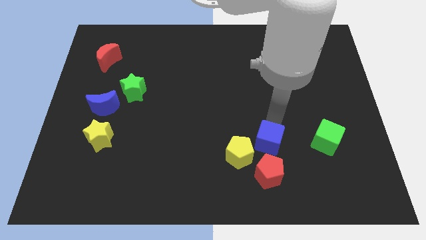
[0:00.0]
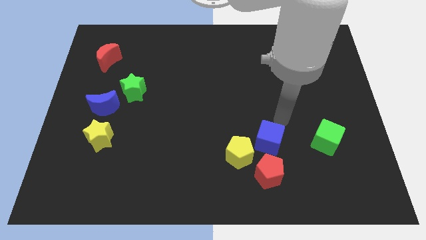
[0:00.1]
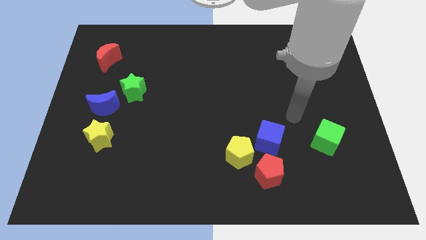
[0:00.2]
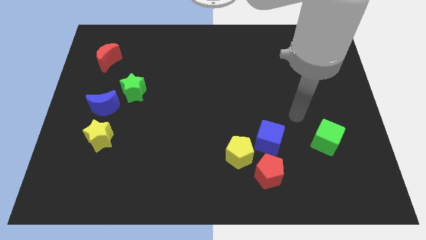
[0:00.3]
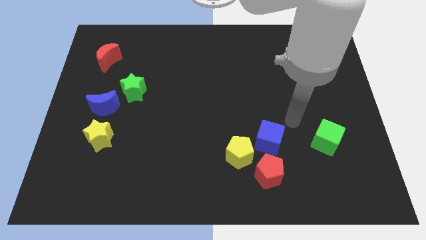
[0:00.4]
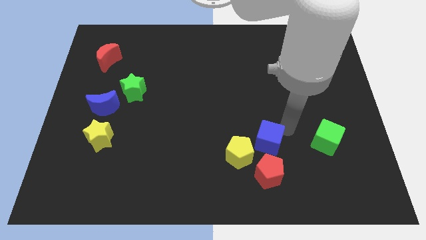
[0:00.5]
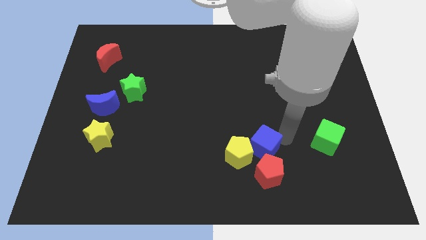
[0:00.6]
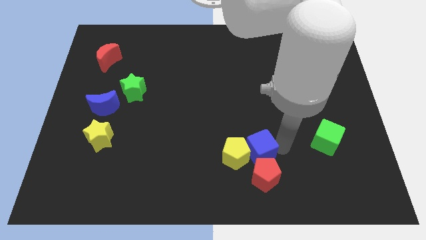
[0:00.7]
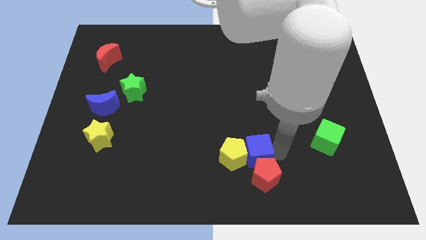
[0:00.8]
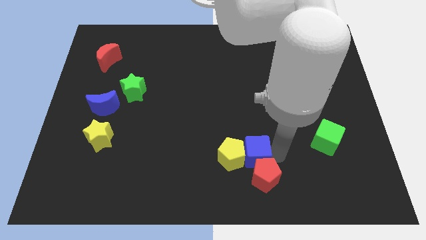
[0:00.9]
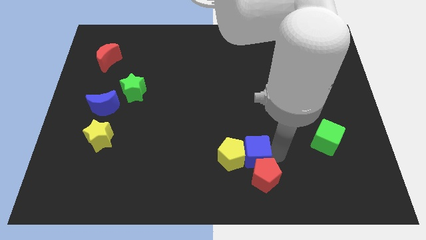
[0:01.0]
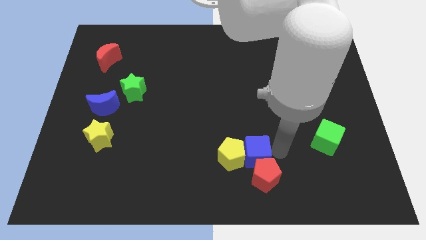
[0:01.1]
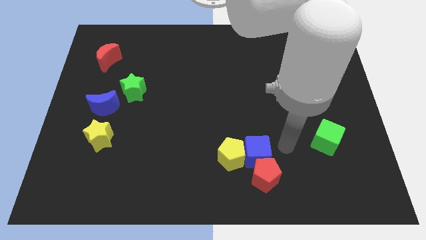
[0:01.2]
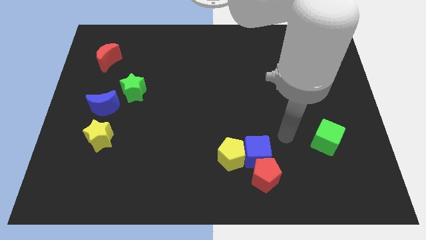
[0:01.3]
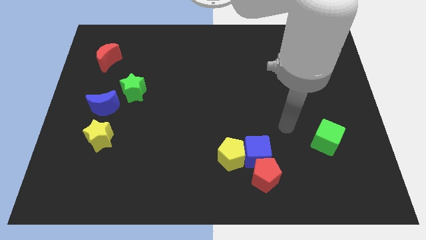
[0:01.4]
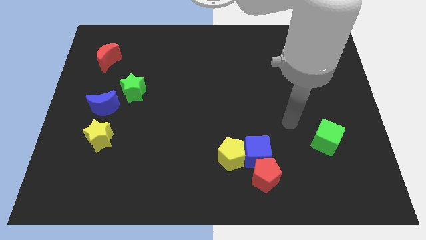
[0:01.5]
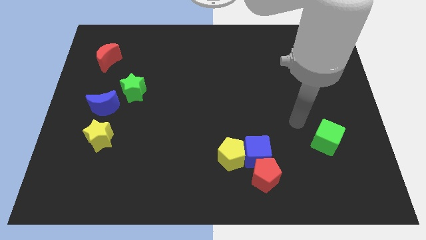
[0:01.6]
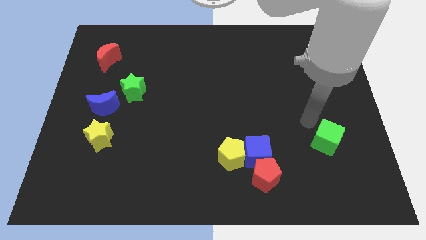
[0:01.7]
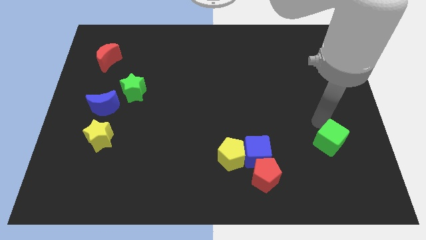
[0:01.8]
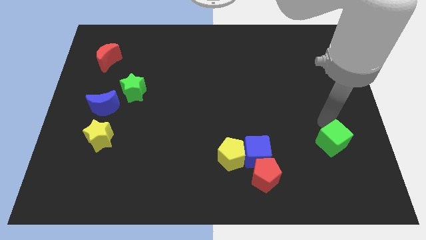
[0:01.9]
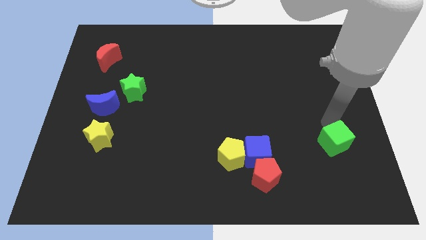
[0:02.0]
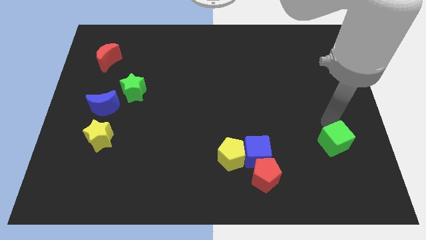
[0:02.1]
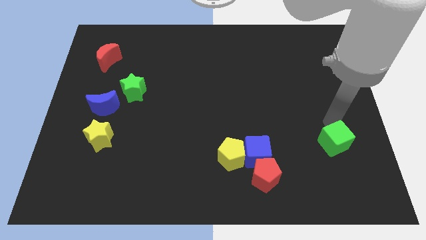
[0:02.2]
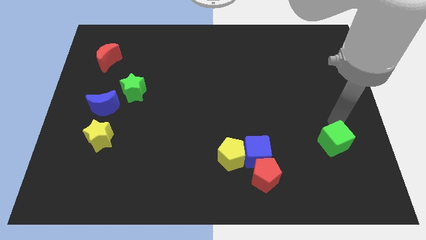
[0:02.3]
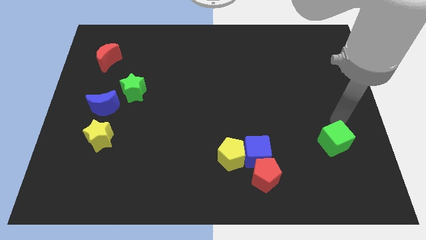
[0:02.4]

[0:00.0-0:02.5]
push the blue cube into the yellow pentagon and red pentagon

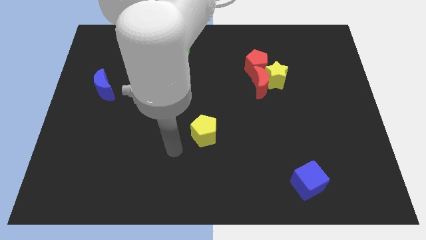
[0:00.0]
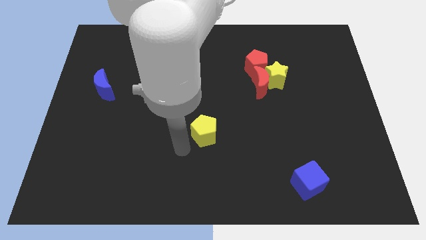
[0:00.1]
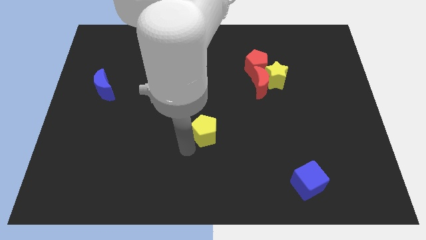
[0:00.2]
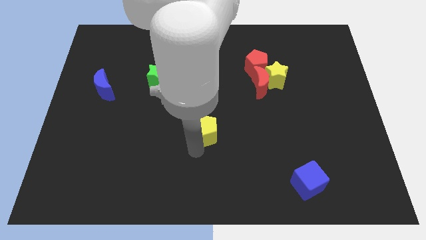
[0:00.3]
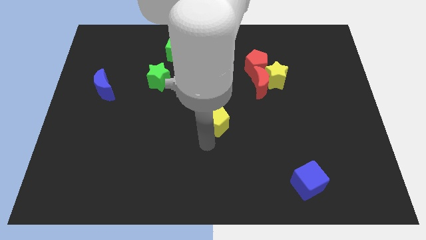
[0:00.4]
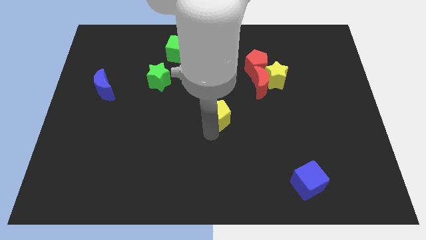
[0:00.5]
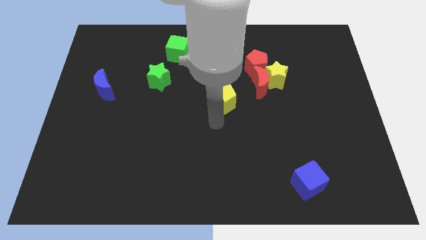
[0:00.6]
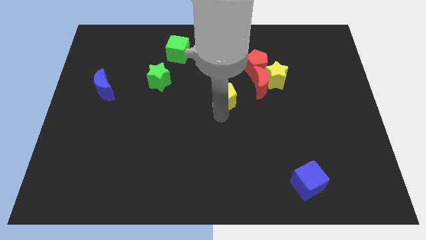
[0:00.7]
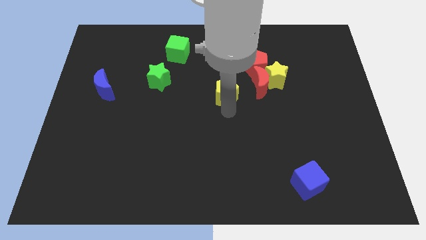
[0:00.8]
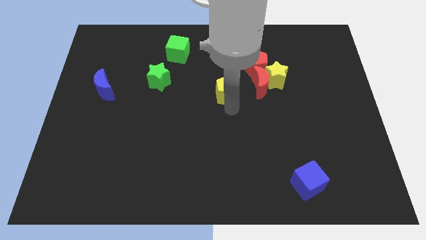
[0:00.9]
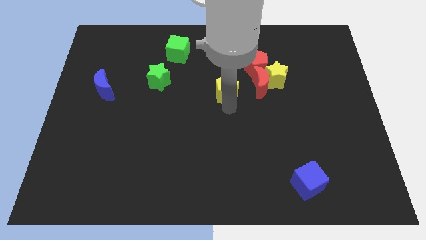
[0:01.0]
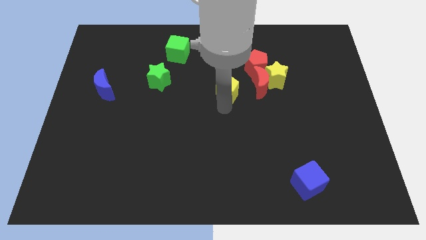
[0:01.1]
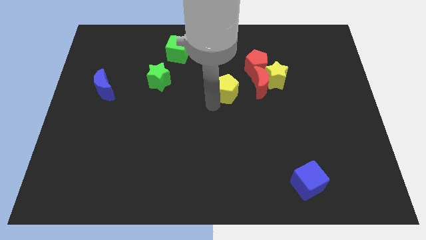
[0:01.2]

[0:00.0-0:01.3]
slide the yellow pentagon slightly towards up

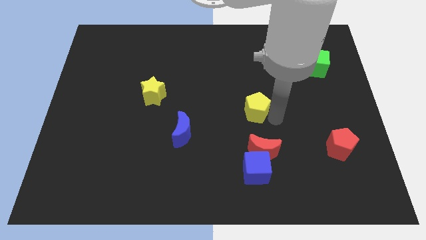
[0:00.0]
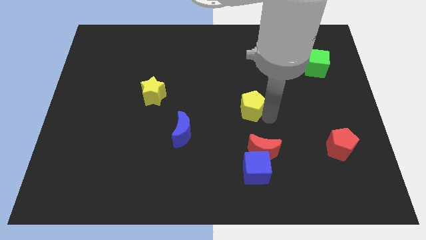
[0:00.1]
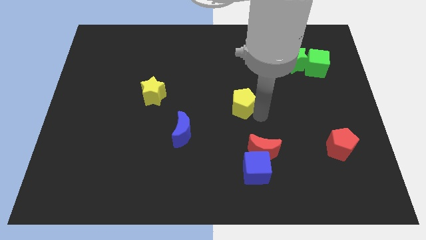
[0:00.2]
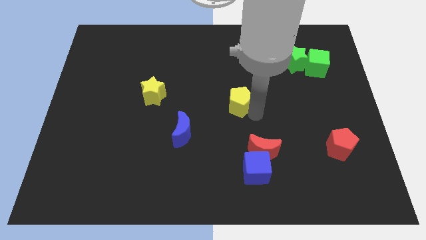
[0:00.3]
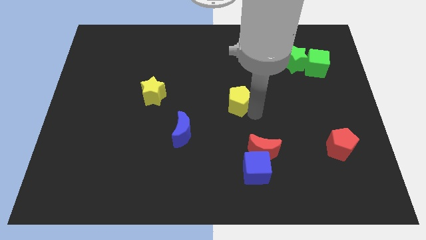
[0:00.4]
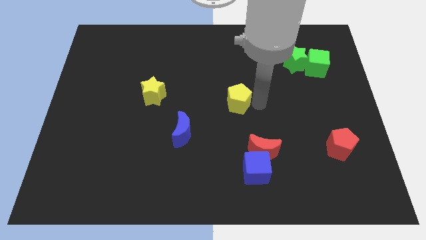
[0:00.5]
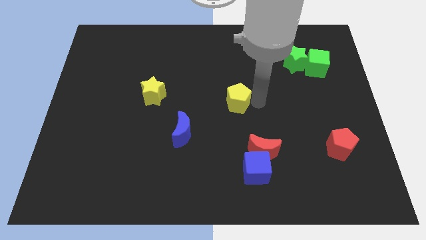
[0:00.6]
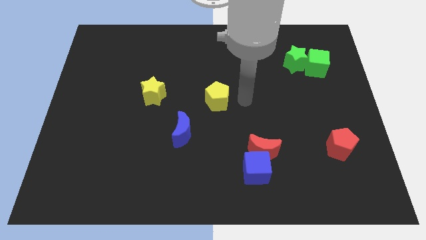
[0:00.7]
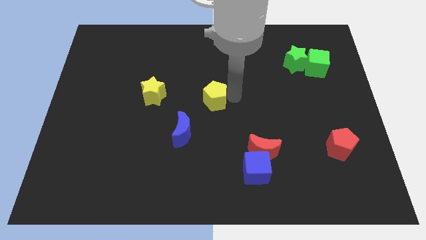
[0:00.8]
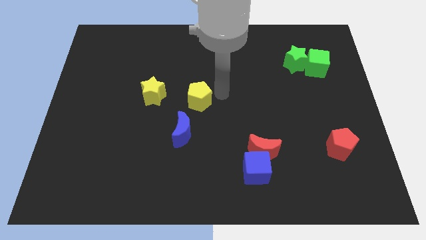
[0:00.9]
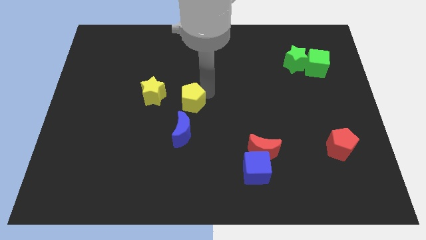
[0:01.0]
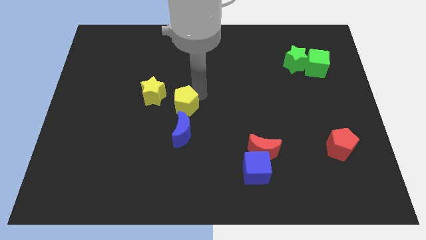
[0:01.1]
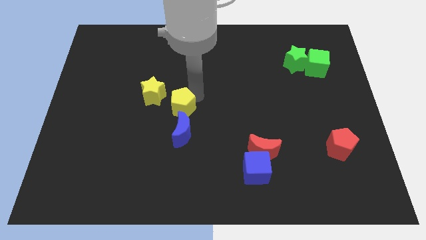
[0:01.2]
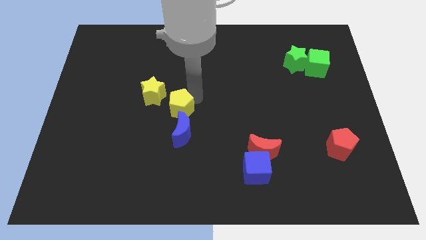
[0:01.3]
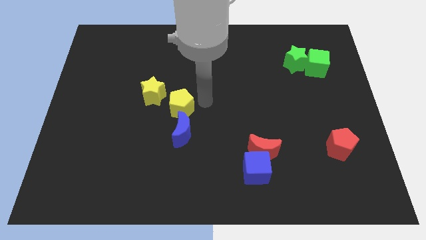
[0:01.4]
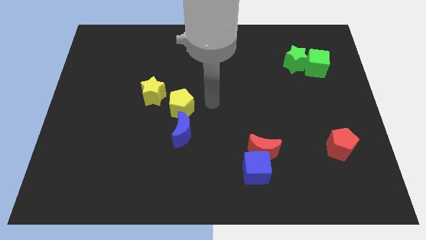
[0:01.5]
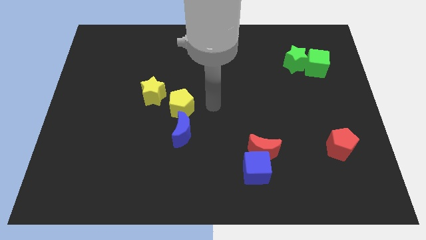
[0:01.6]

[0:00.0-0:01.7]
place yellow pentagon at the top of blue crescent

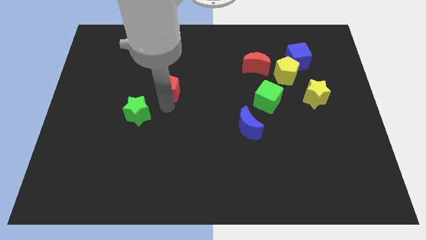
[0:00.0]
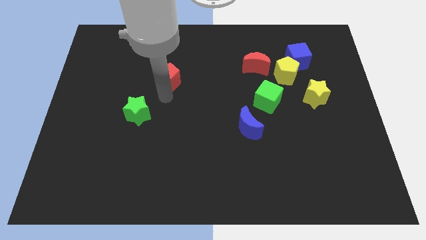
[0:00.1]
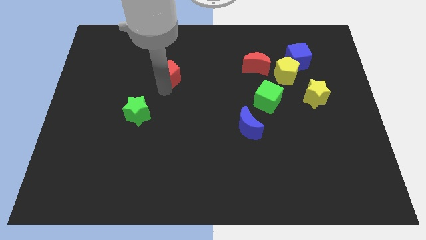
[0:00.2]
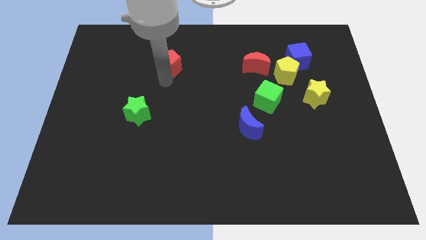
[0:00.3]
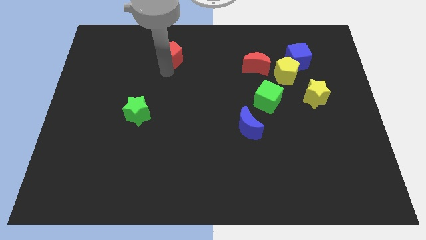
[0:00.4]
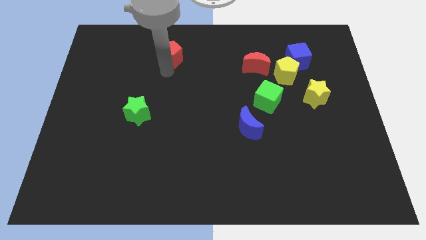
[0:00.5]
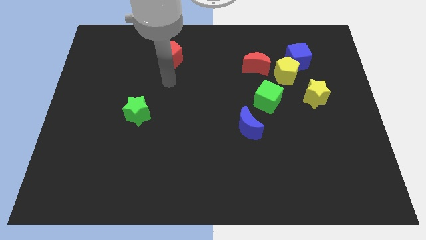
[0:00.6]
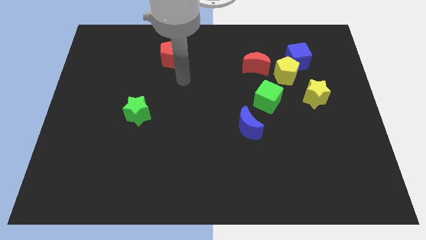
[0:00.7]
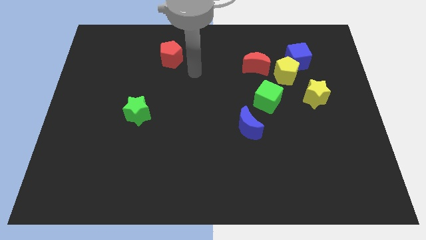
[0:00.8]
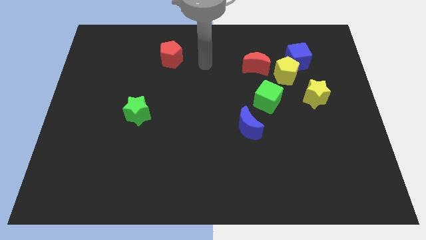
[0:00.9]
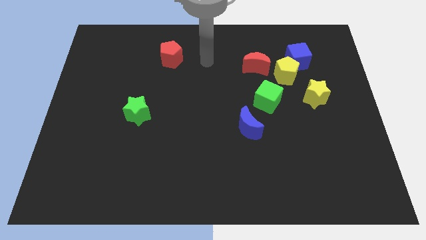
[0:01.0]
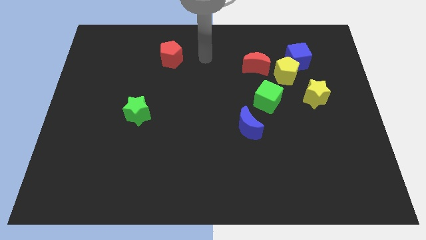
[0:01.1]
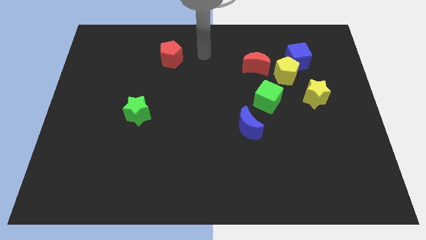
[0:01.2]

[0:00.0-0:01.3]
slide the red pentagon diagonally top left to the green cube

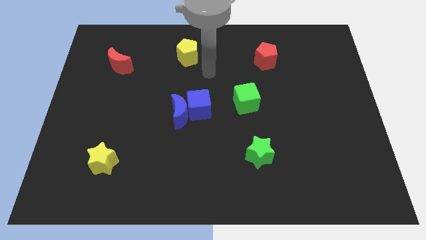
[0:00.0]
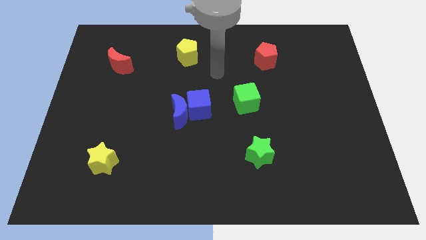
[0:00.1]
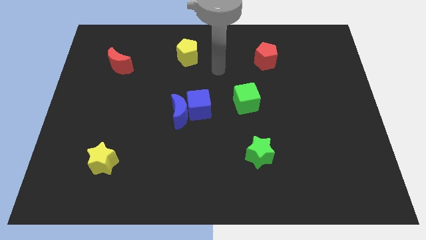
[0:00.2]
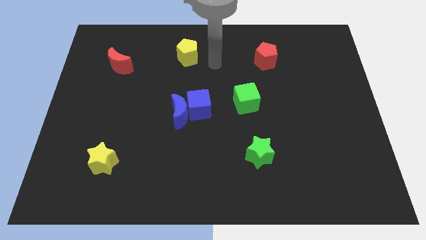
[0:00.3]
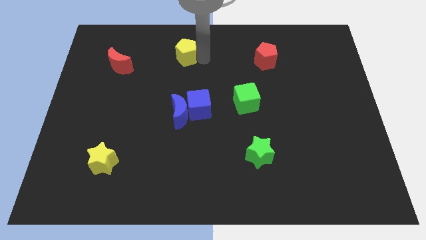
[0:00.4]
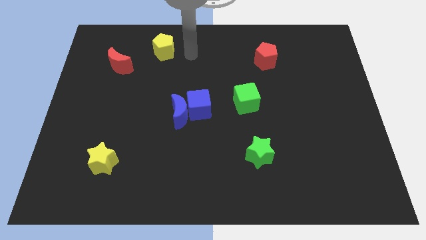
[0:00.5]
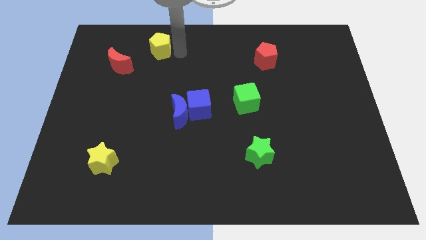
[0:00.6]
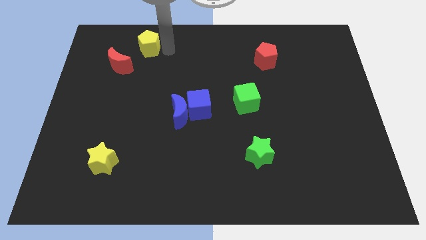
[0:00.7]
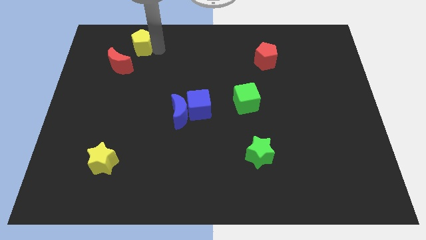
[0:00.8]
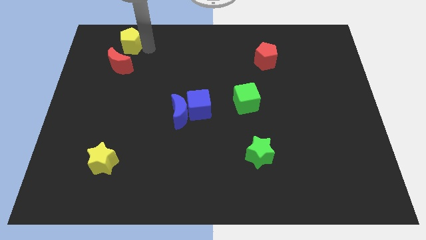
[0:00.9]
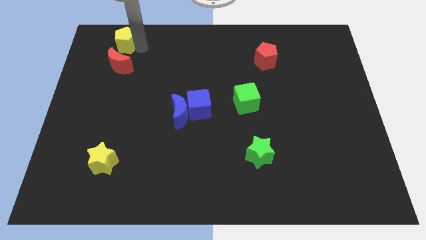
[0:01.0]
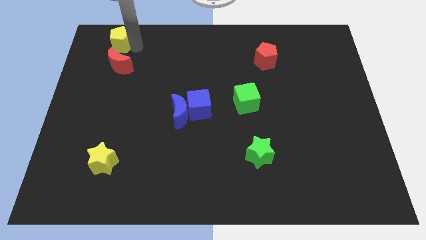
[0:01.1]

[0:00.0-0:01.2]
place the yellow pentagon above the red crescent

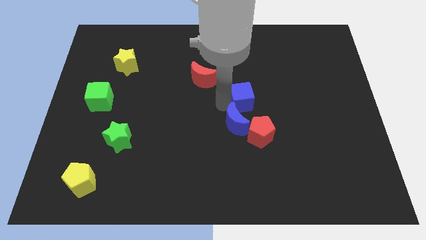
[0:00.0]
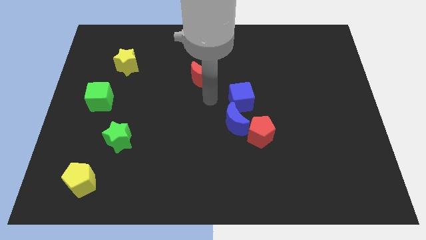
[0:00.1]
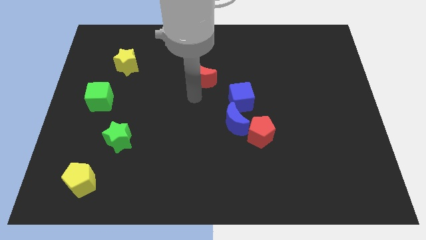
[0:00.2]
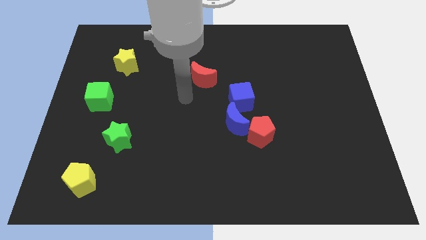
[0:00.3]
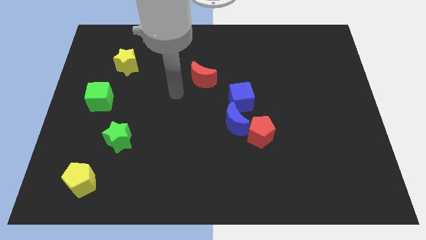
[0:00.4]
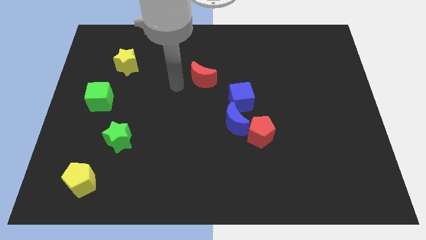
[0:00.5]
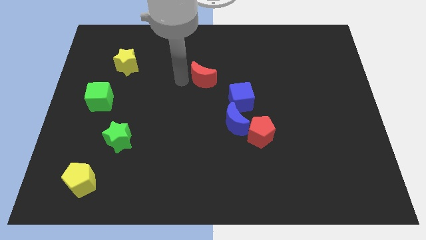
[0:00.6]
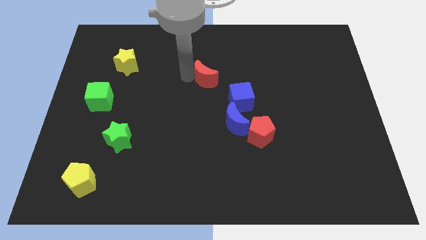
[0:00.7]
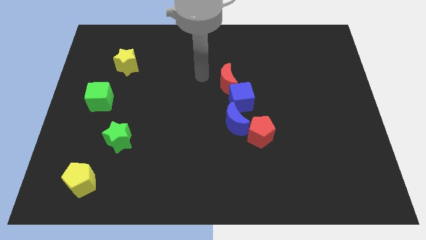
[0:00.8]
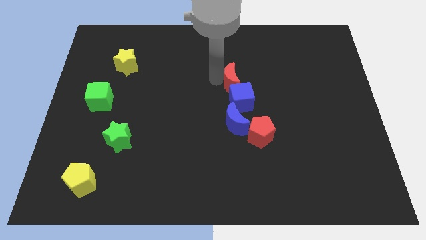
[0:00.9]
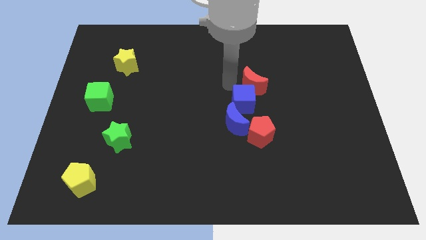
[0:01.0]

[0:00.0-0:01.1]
place the red moon above the blue cube
